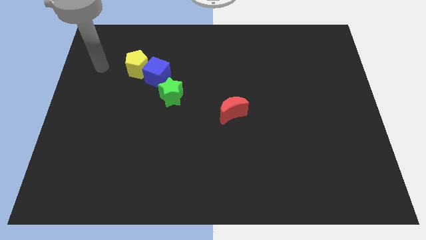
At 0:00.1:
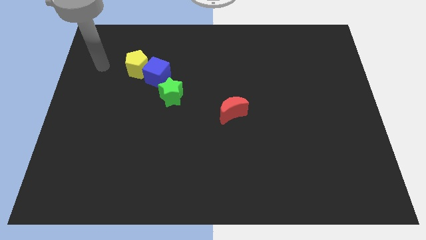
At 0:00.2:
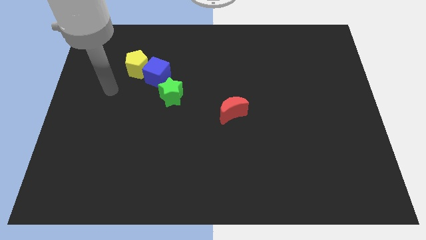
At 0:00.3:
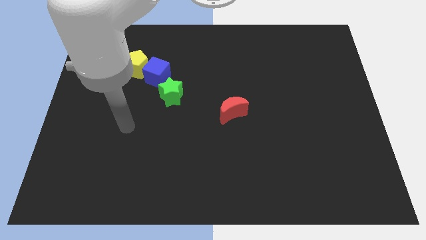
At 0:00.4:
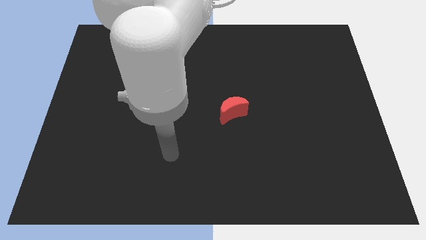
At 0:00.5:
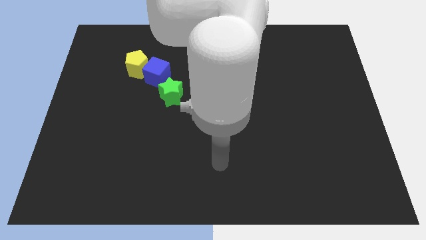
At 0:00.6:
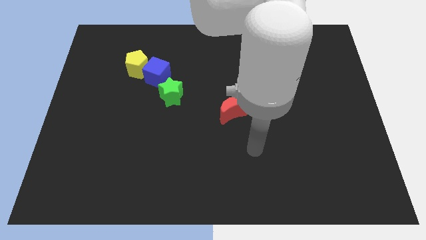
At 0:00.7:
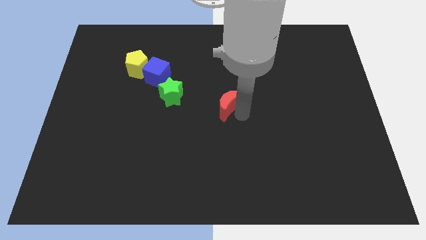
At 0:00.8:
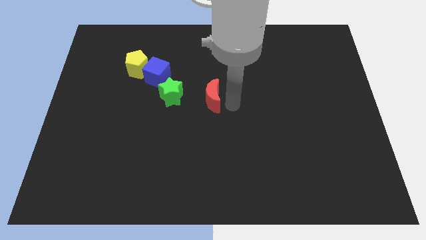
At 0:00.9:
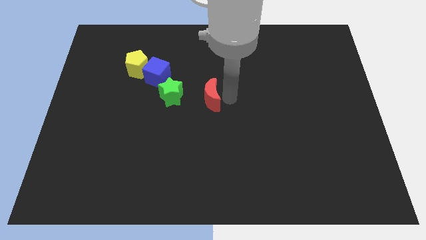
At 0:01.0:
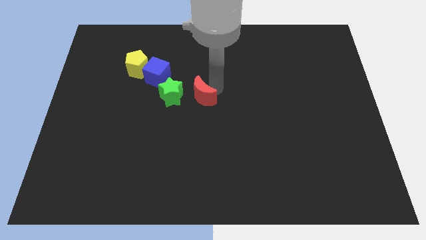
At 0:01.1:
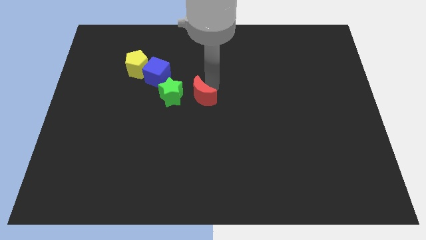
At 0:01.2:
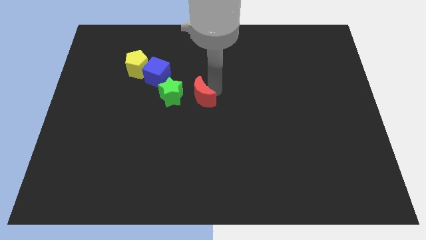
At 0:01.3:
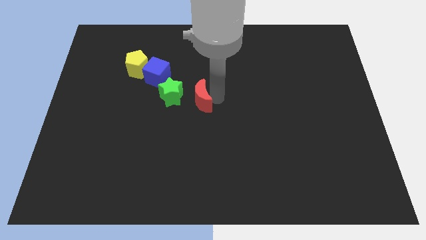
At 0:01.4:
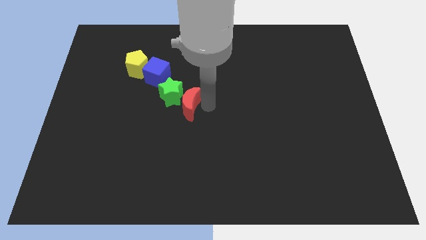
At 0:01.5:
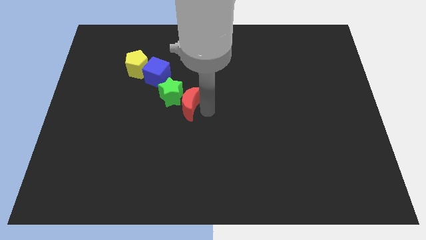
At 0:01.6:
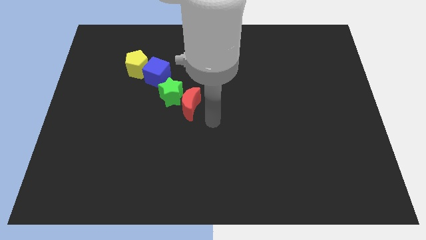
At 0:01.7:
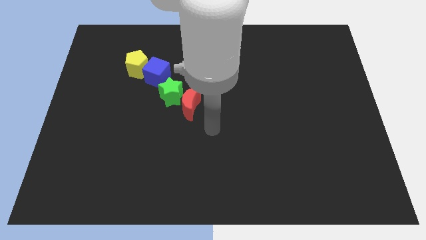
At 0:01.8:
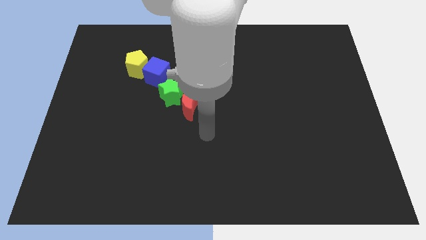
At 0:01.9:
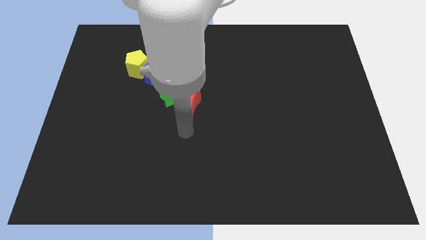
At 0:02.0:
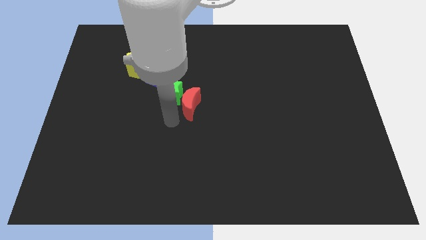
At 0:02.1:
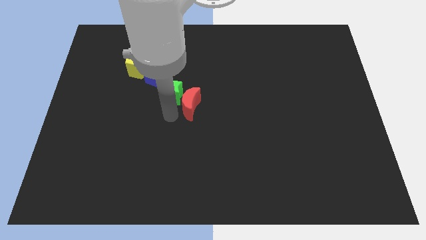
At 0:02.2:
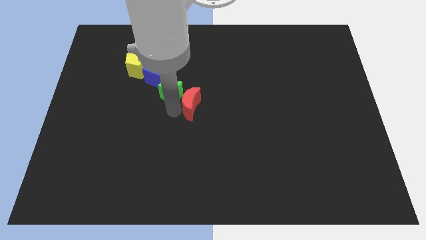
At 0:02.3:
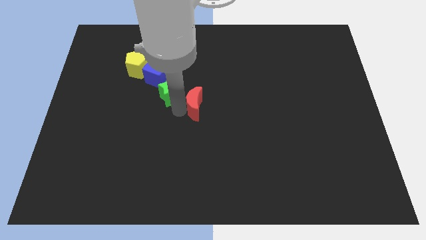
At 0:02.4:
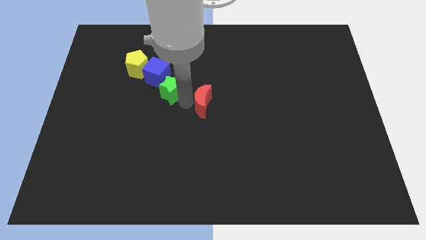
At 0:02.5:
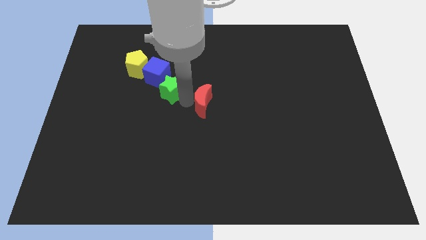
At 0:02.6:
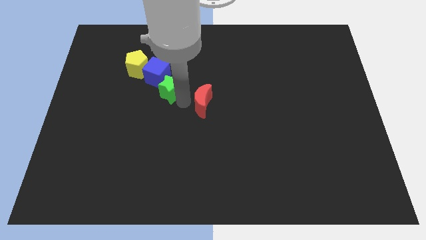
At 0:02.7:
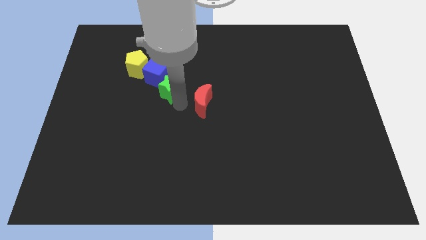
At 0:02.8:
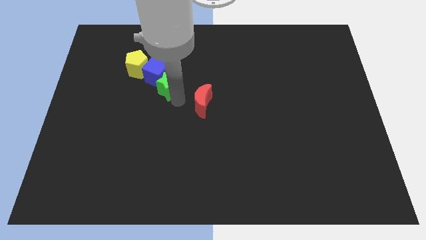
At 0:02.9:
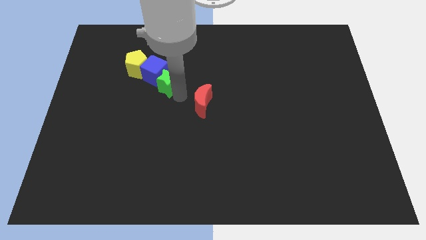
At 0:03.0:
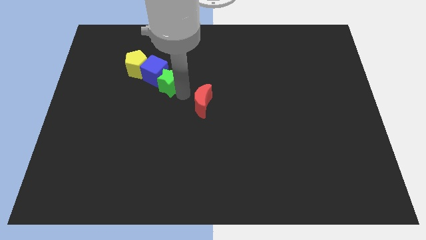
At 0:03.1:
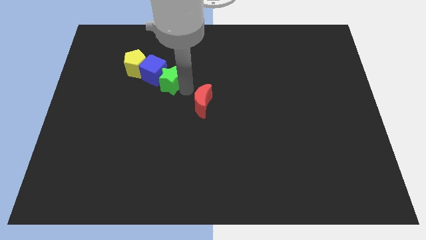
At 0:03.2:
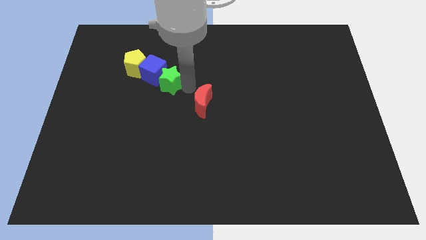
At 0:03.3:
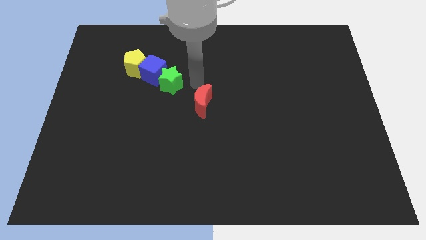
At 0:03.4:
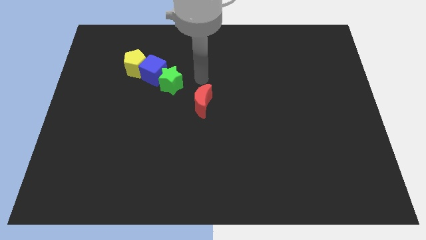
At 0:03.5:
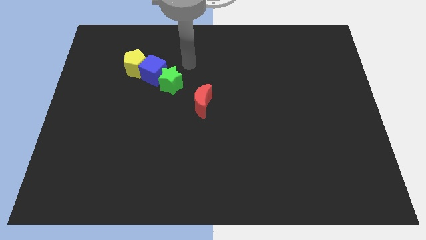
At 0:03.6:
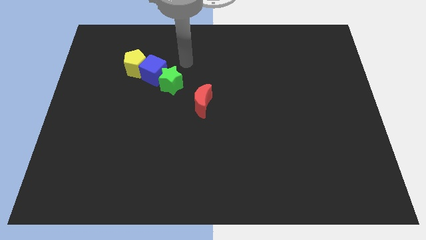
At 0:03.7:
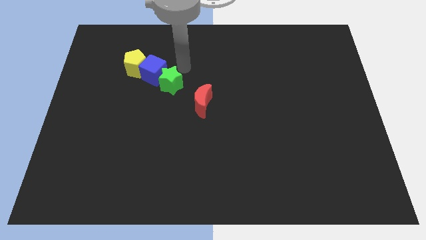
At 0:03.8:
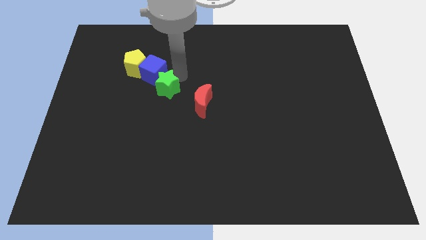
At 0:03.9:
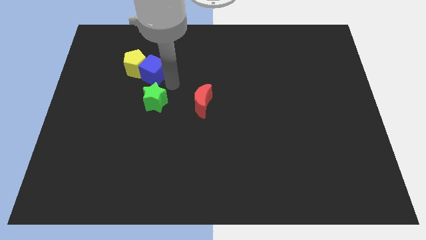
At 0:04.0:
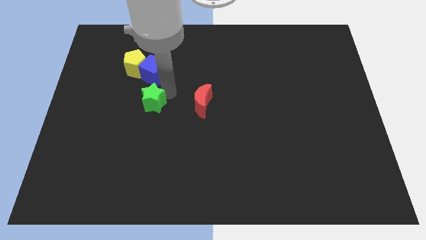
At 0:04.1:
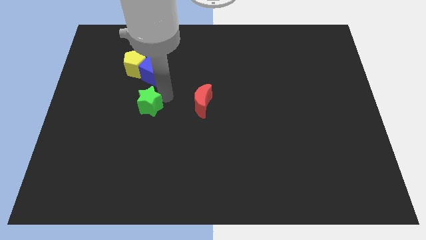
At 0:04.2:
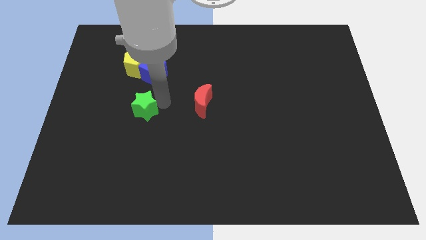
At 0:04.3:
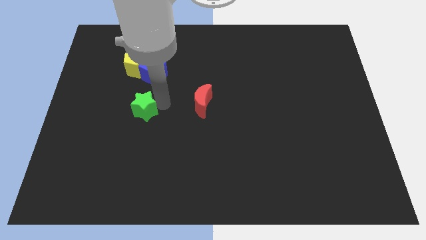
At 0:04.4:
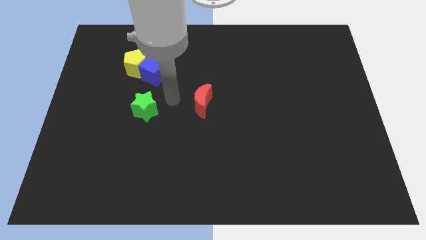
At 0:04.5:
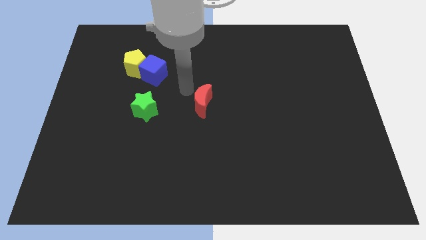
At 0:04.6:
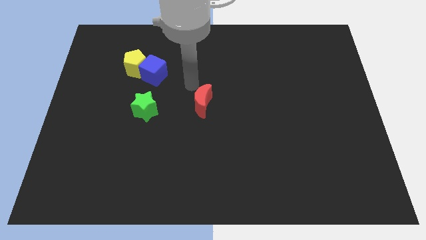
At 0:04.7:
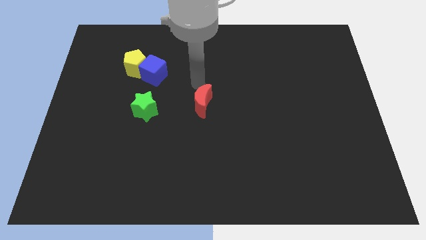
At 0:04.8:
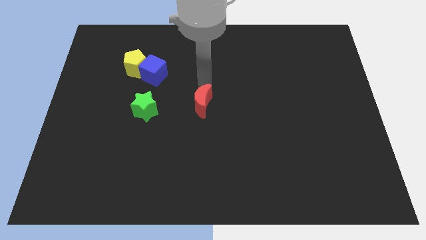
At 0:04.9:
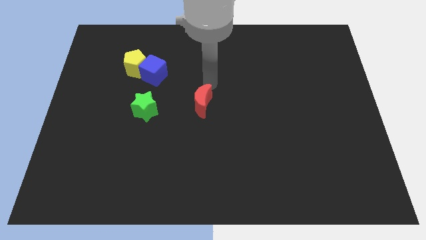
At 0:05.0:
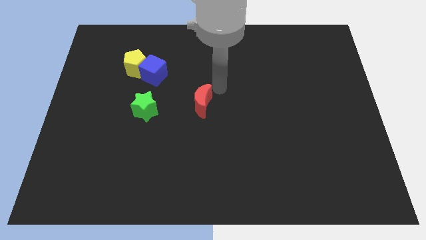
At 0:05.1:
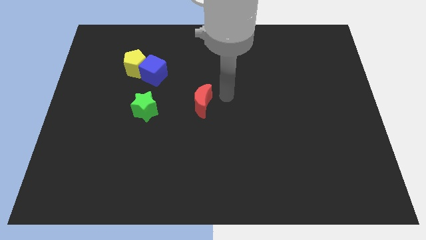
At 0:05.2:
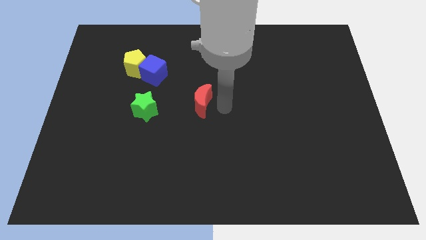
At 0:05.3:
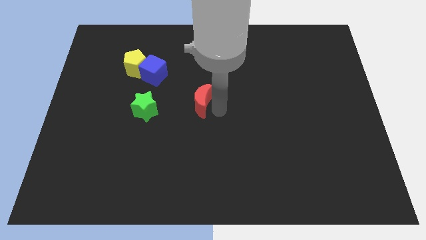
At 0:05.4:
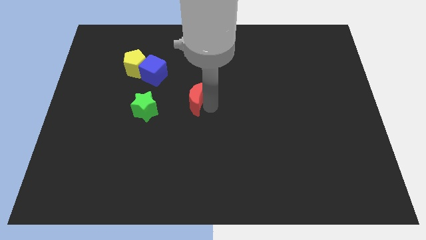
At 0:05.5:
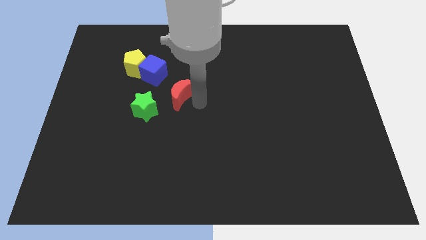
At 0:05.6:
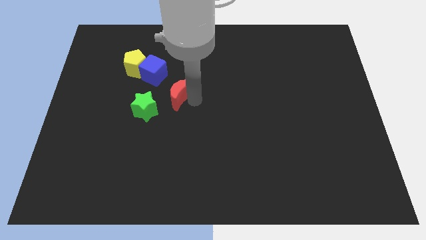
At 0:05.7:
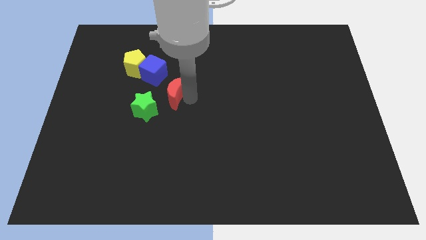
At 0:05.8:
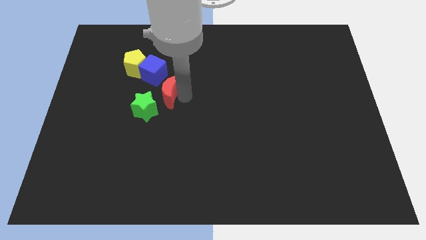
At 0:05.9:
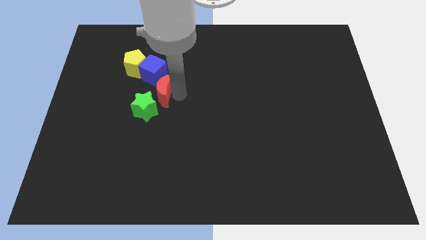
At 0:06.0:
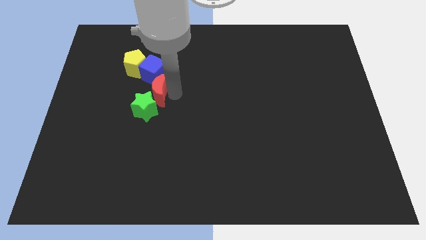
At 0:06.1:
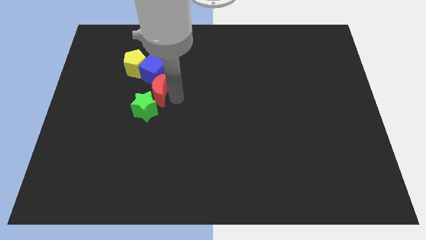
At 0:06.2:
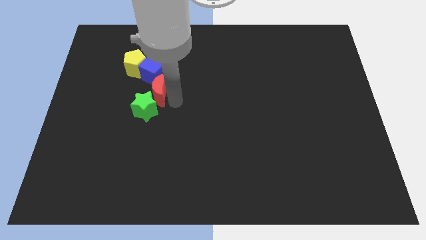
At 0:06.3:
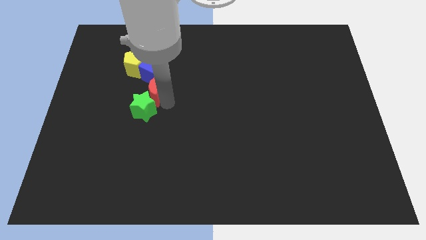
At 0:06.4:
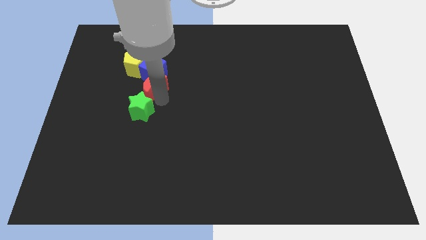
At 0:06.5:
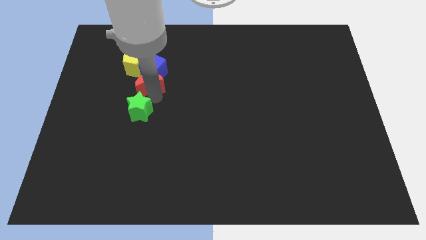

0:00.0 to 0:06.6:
push the red block close to the blue cube

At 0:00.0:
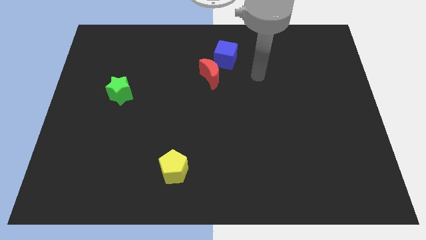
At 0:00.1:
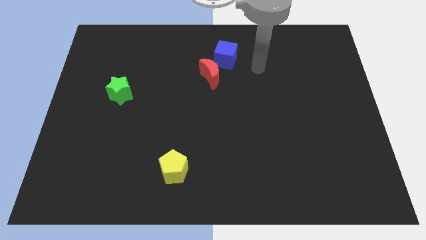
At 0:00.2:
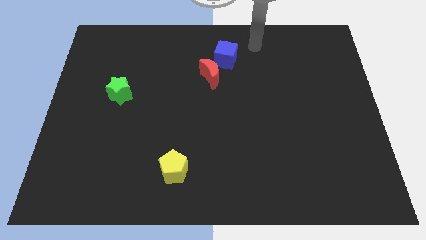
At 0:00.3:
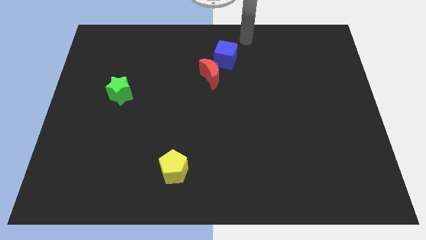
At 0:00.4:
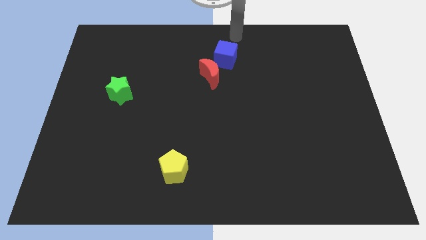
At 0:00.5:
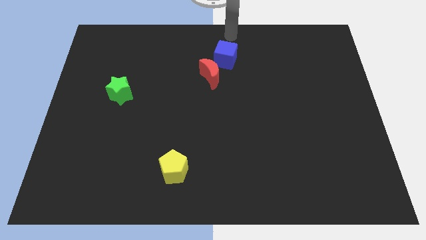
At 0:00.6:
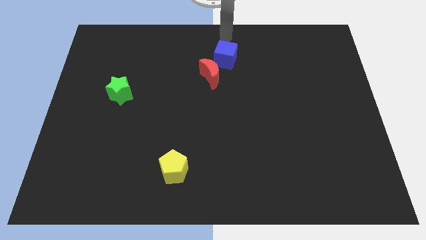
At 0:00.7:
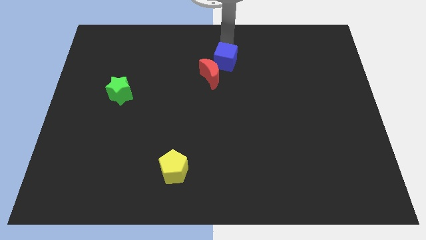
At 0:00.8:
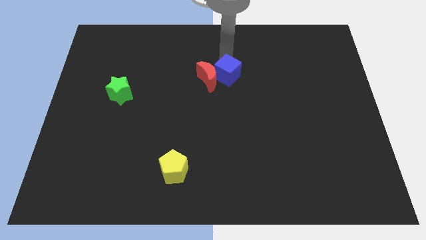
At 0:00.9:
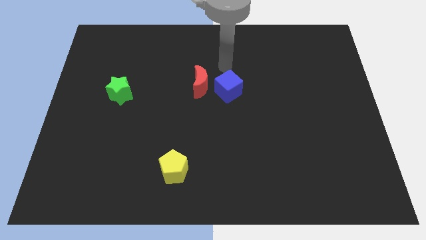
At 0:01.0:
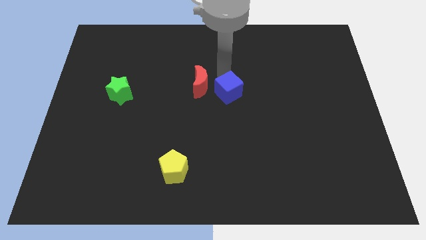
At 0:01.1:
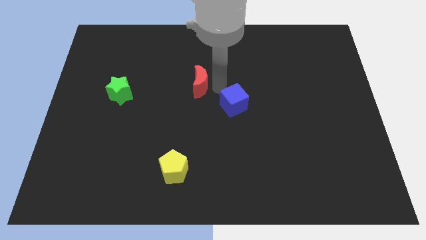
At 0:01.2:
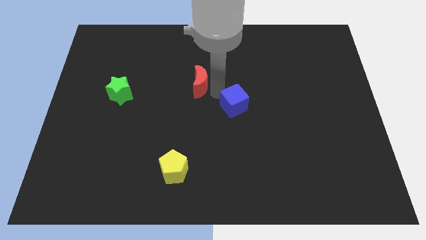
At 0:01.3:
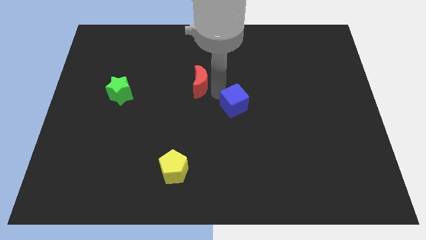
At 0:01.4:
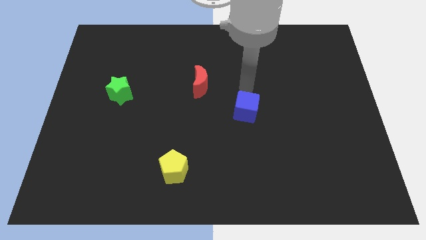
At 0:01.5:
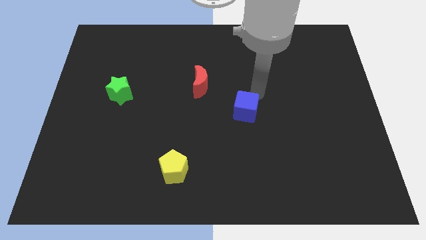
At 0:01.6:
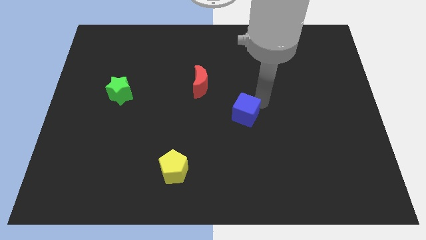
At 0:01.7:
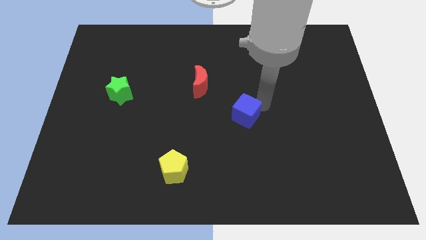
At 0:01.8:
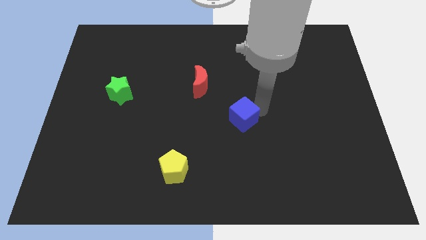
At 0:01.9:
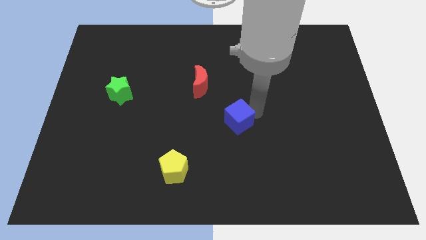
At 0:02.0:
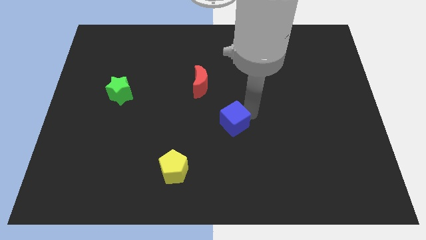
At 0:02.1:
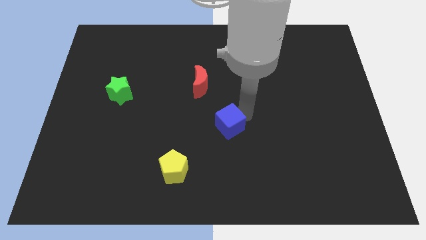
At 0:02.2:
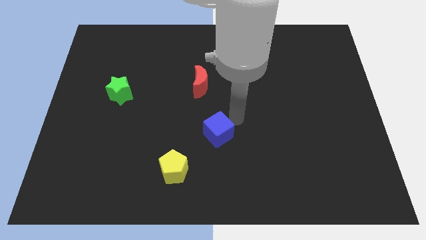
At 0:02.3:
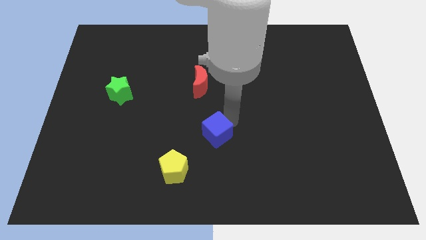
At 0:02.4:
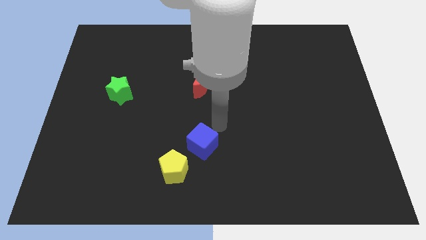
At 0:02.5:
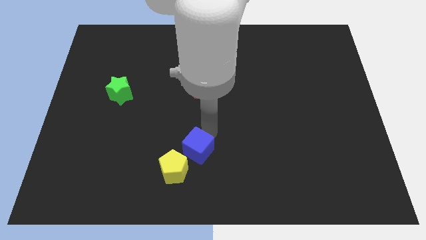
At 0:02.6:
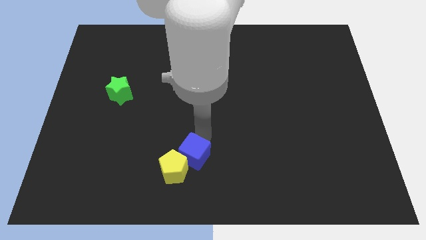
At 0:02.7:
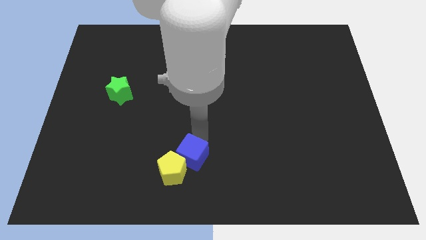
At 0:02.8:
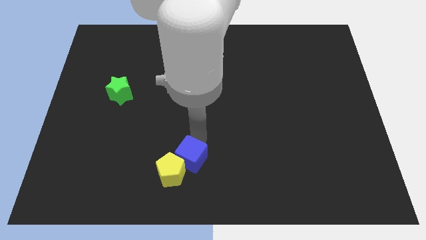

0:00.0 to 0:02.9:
slide the cube towards the pentagon
